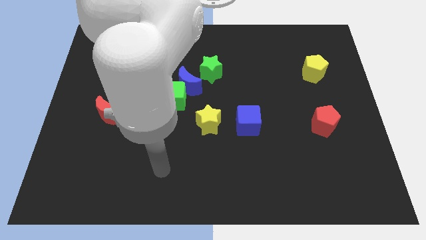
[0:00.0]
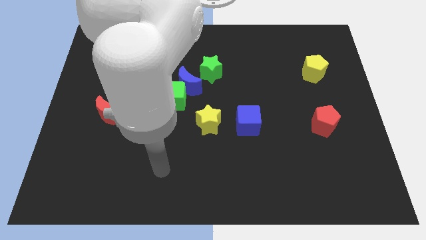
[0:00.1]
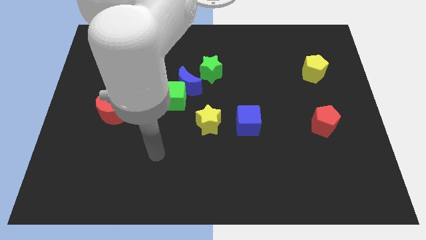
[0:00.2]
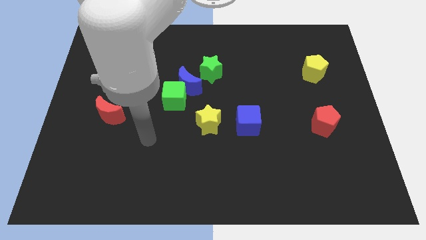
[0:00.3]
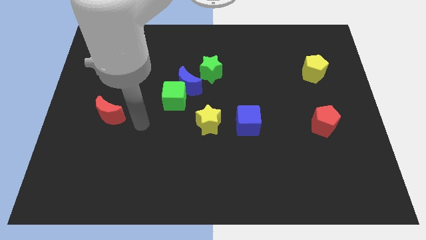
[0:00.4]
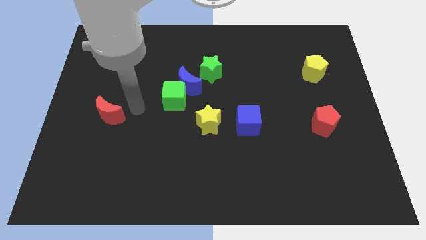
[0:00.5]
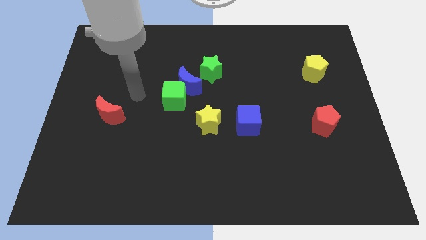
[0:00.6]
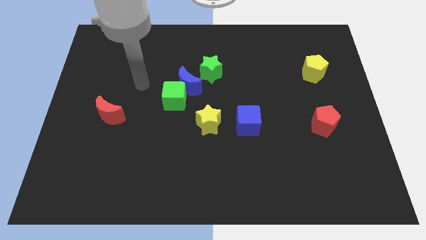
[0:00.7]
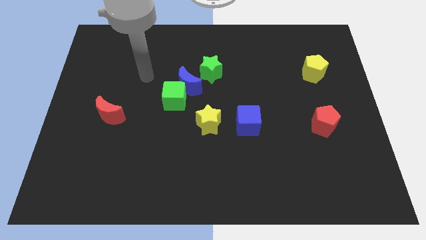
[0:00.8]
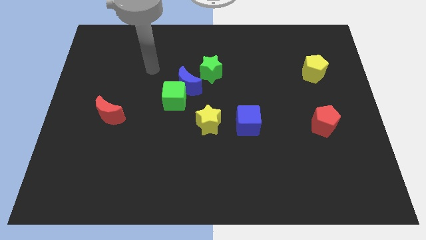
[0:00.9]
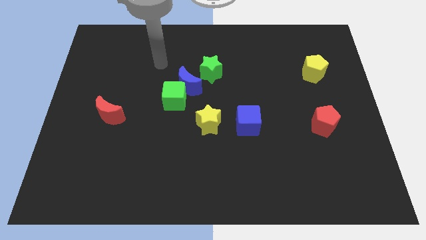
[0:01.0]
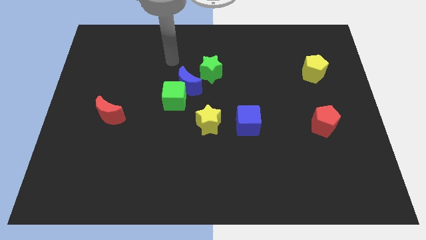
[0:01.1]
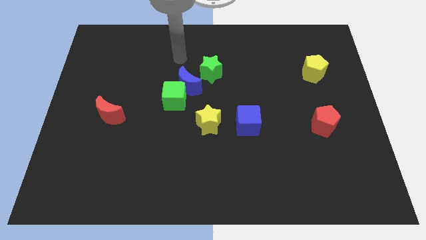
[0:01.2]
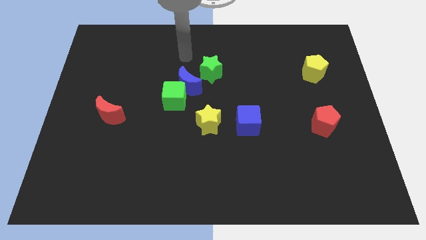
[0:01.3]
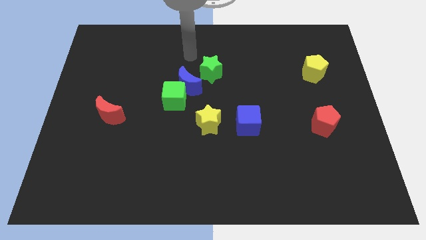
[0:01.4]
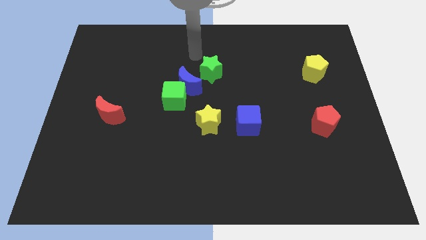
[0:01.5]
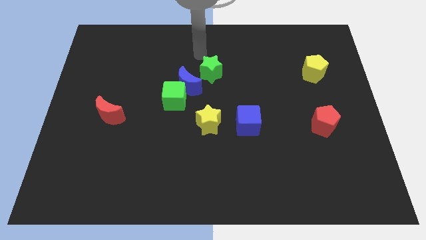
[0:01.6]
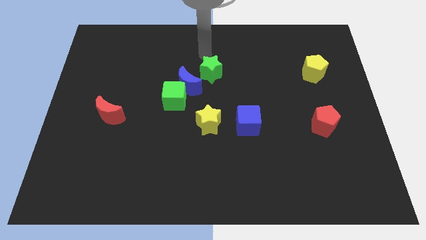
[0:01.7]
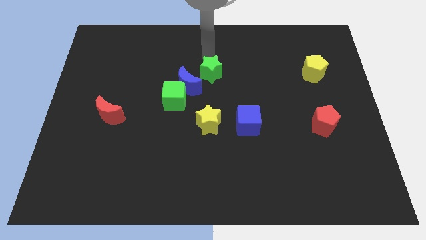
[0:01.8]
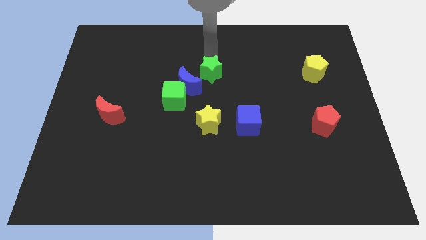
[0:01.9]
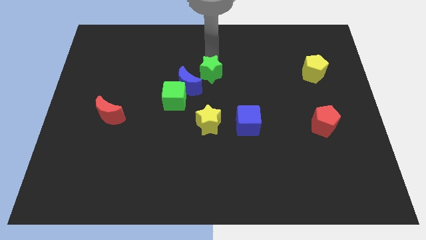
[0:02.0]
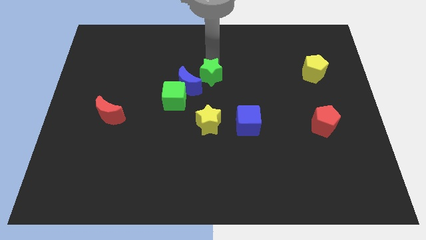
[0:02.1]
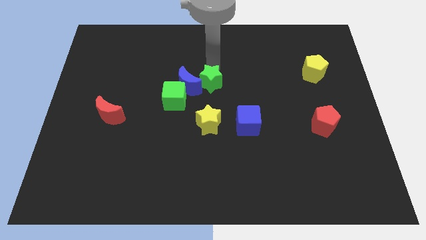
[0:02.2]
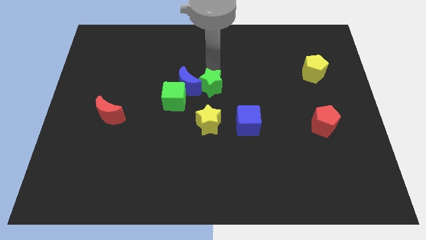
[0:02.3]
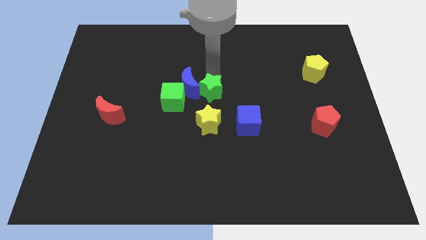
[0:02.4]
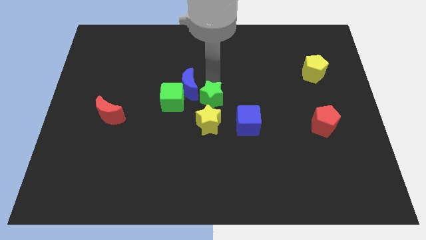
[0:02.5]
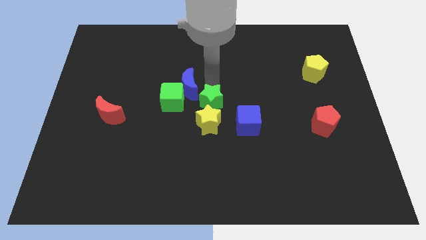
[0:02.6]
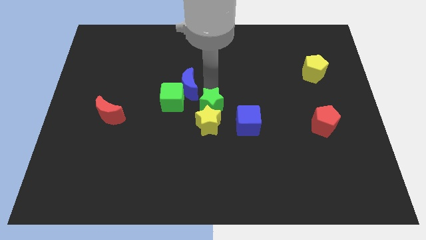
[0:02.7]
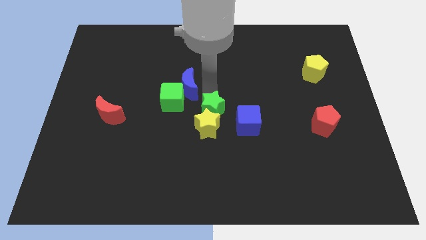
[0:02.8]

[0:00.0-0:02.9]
push the green star towards the yellow star

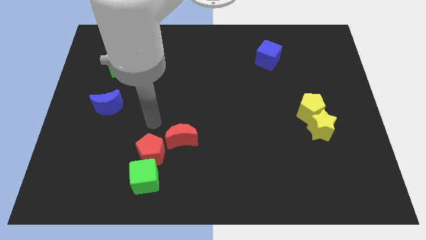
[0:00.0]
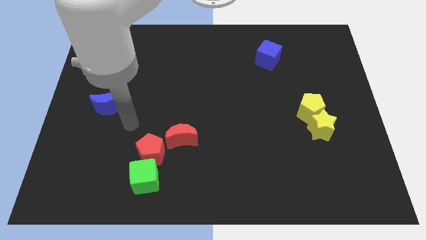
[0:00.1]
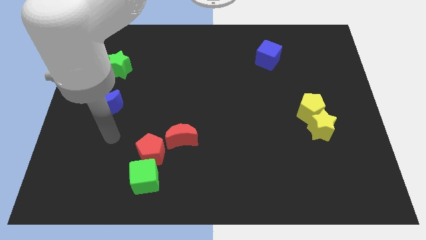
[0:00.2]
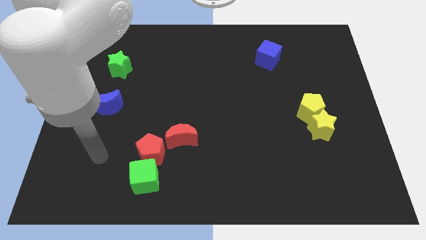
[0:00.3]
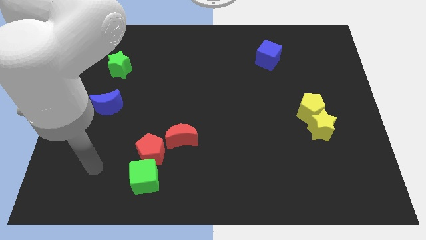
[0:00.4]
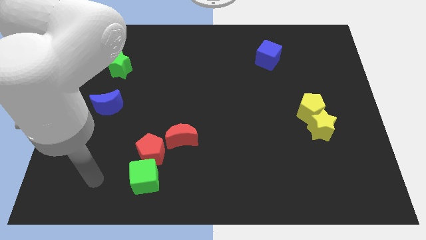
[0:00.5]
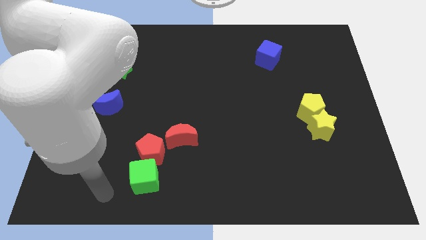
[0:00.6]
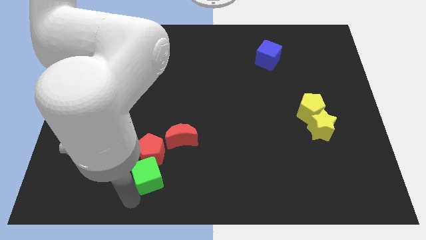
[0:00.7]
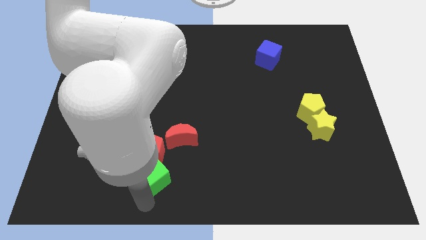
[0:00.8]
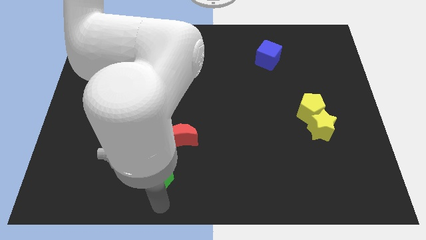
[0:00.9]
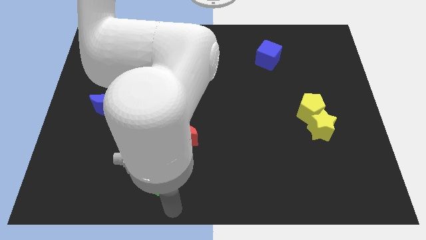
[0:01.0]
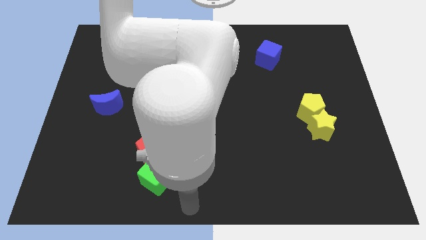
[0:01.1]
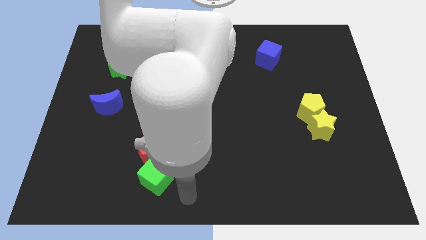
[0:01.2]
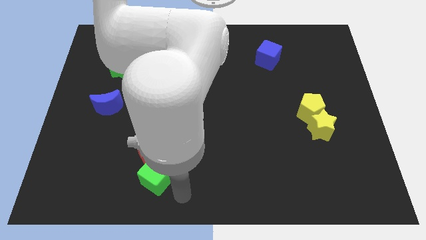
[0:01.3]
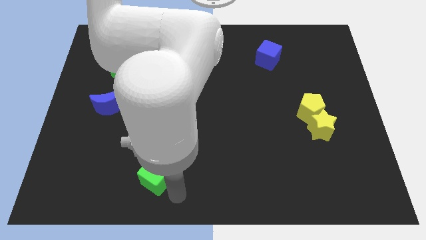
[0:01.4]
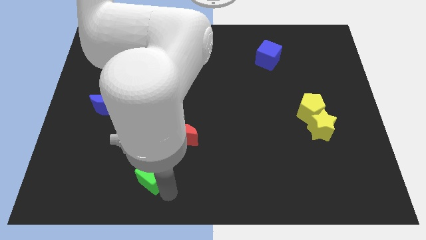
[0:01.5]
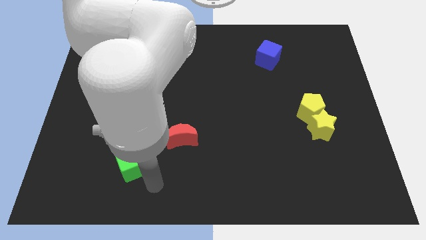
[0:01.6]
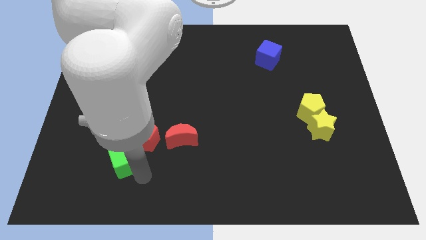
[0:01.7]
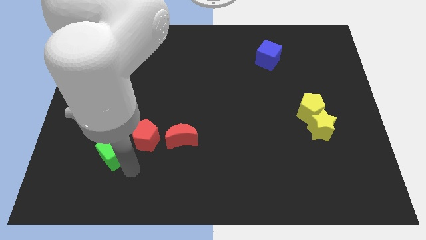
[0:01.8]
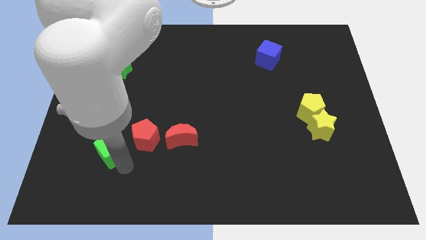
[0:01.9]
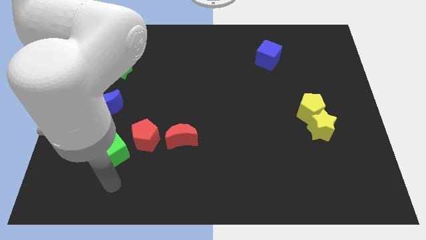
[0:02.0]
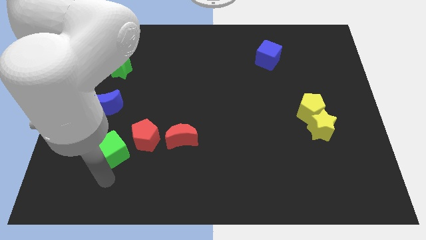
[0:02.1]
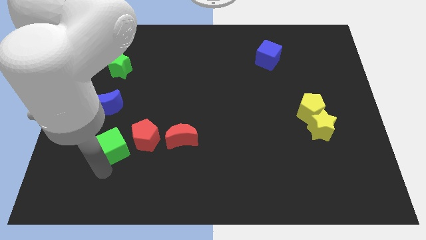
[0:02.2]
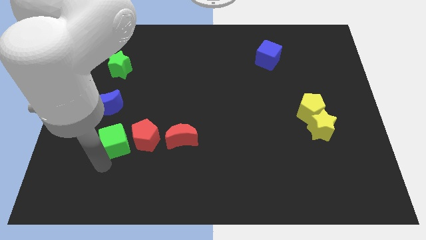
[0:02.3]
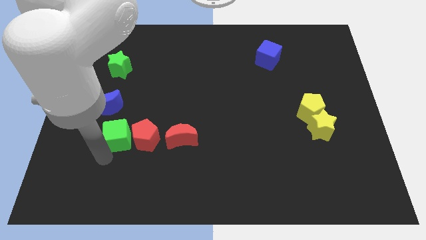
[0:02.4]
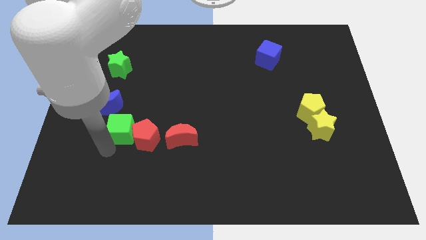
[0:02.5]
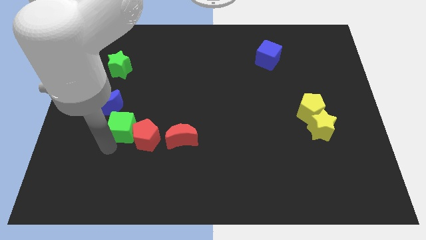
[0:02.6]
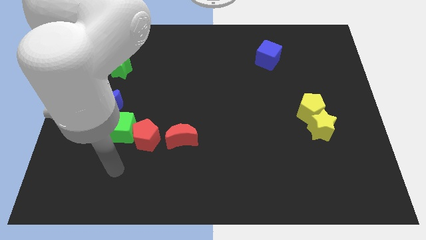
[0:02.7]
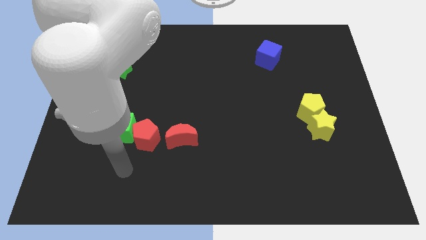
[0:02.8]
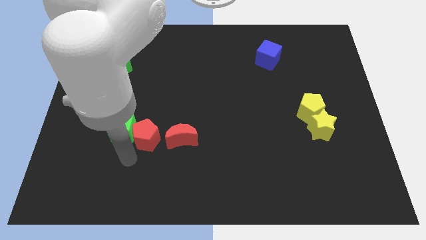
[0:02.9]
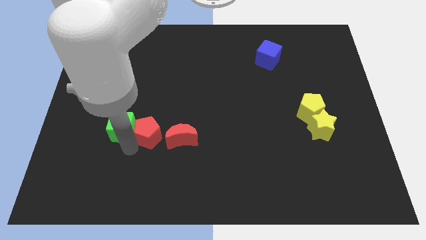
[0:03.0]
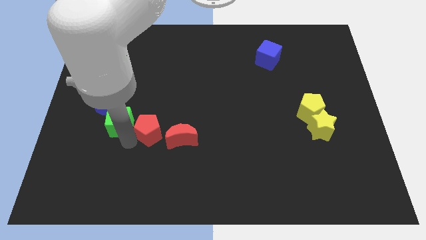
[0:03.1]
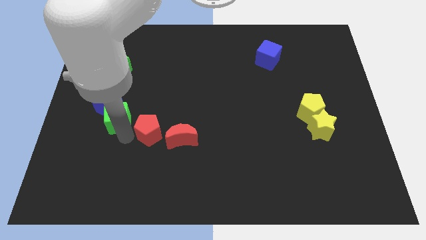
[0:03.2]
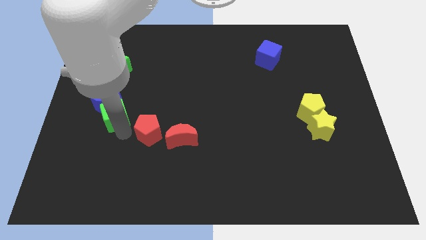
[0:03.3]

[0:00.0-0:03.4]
slide the green cube to the blue moon

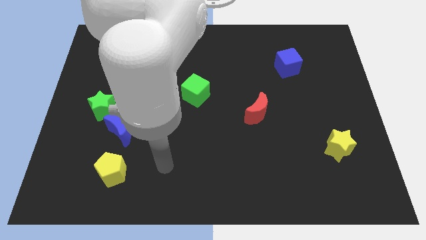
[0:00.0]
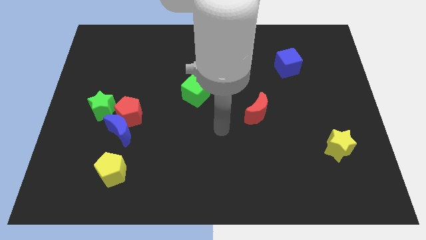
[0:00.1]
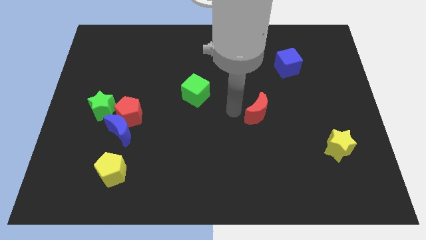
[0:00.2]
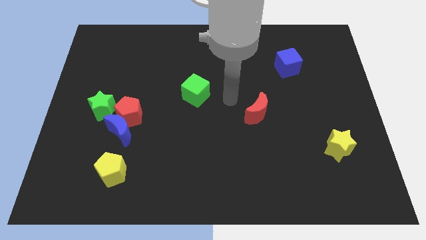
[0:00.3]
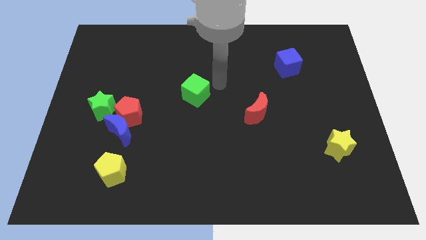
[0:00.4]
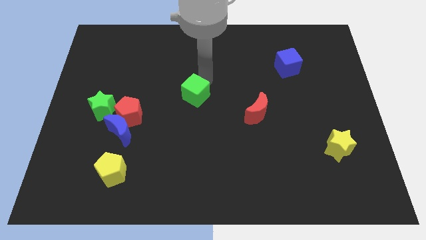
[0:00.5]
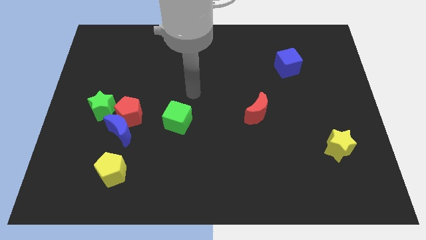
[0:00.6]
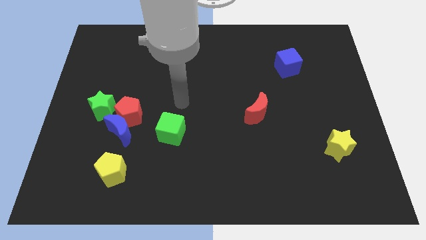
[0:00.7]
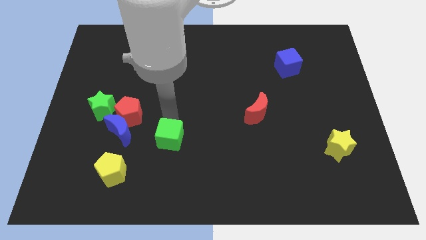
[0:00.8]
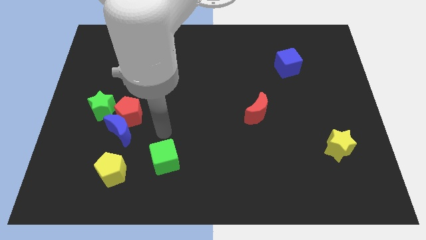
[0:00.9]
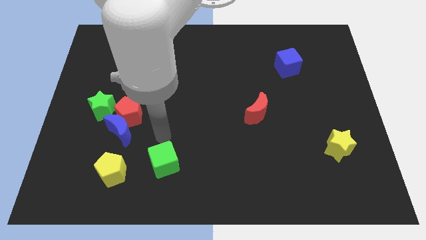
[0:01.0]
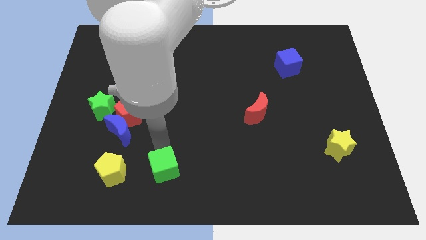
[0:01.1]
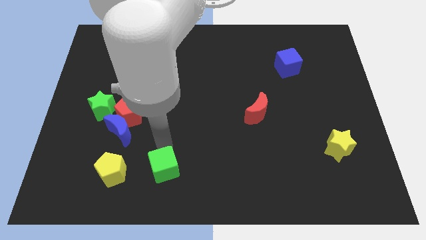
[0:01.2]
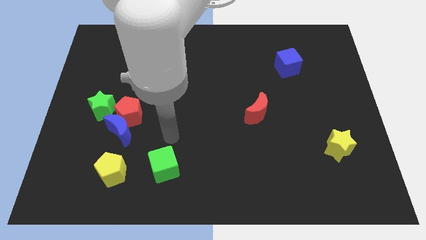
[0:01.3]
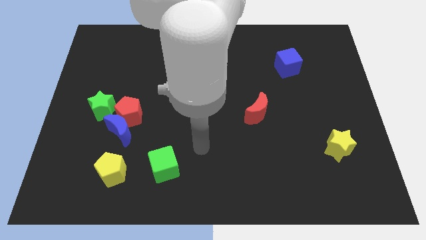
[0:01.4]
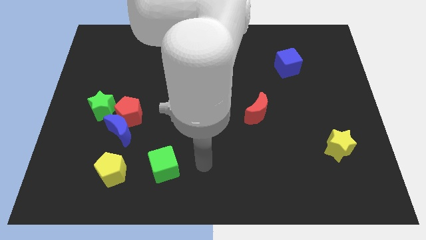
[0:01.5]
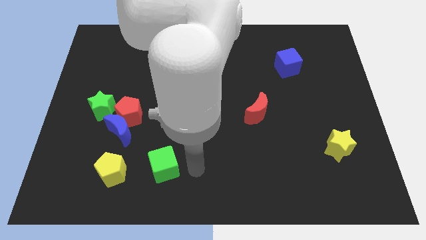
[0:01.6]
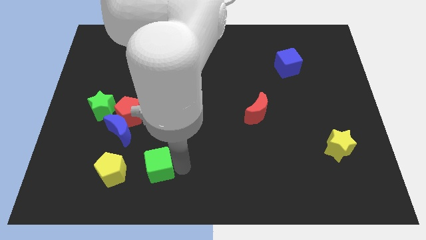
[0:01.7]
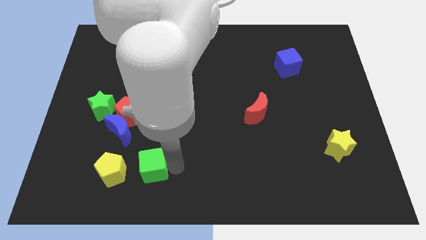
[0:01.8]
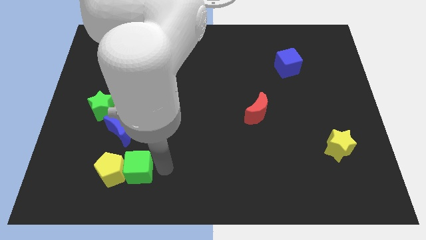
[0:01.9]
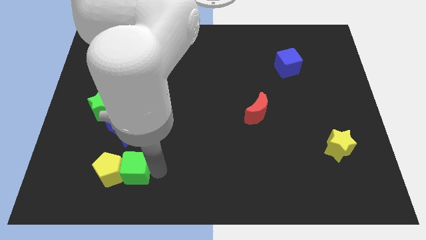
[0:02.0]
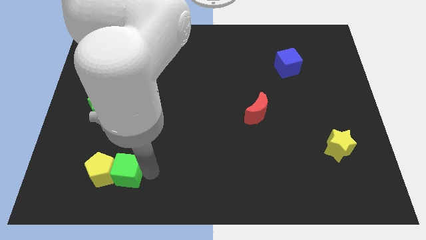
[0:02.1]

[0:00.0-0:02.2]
slide the green cube next to the yellow pentagon

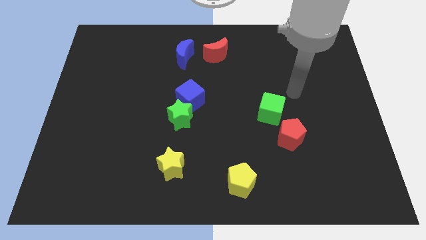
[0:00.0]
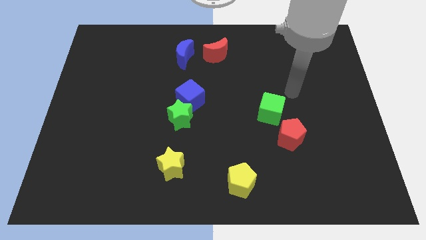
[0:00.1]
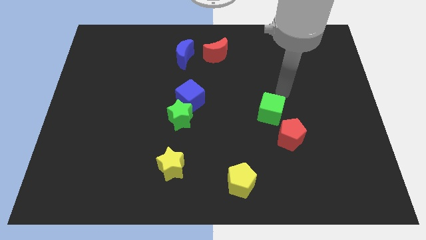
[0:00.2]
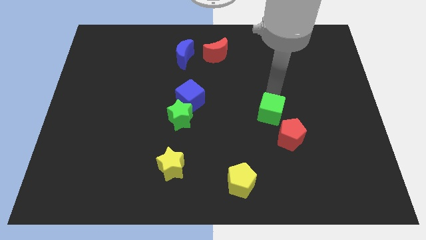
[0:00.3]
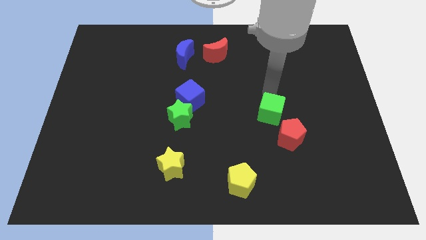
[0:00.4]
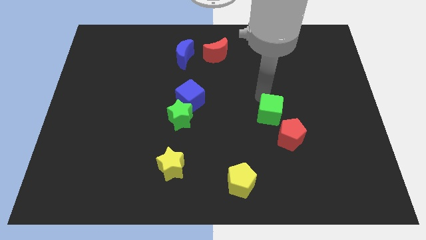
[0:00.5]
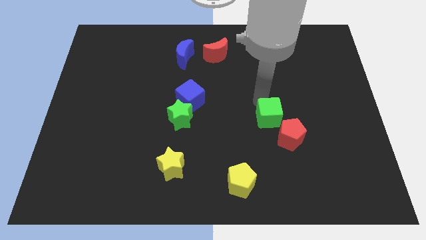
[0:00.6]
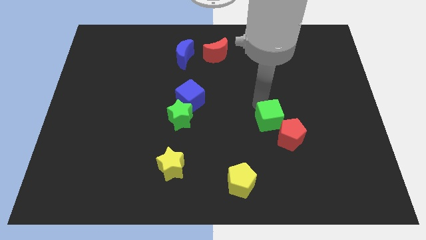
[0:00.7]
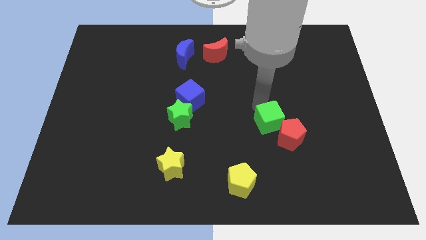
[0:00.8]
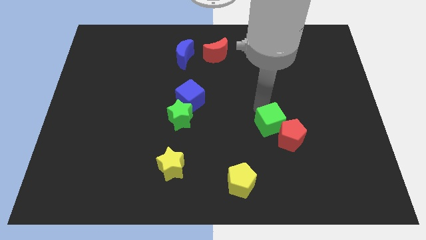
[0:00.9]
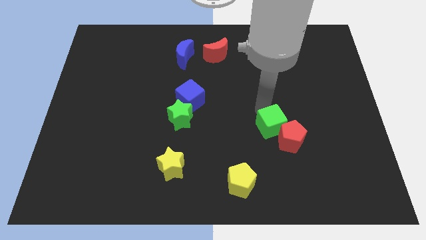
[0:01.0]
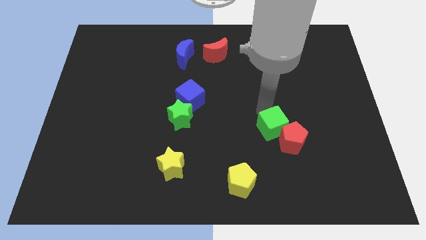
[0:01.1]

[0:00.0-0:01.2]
move the green cube next to the red pentagon
